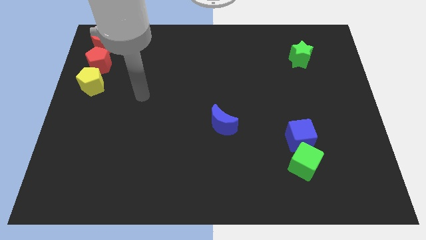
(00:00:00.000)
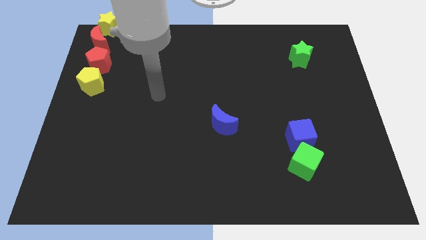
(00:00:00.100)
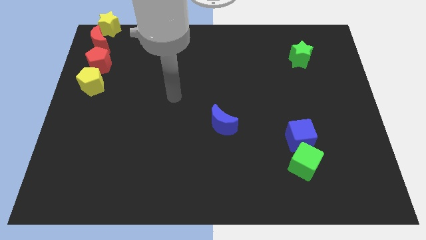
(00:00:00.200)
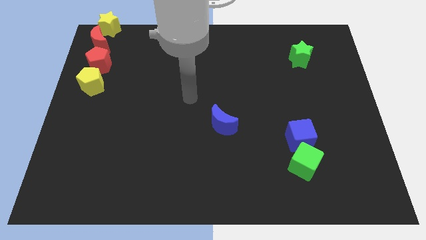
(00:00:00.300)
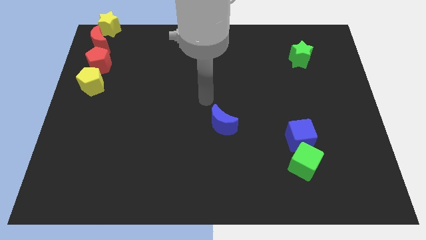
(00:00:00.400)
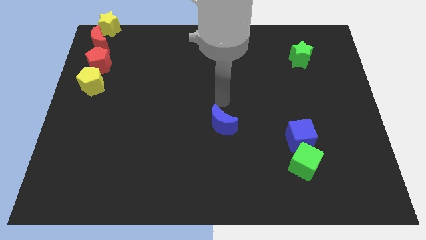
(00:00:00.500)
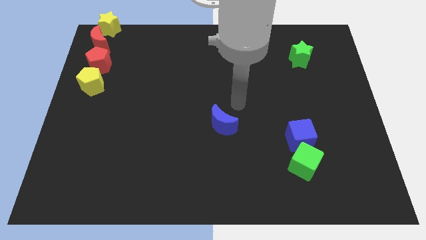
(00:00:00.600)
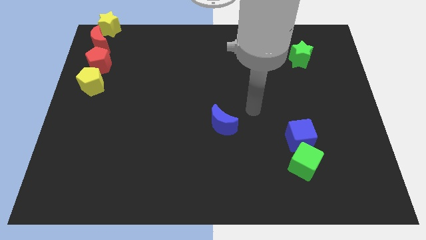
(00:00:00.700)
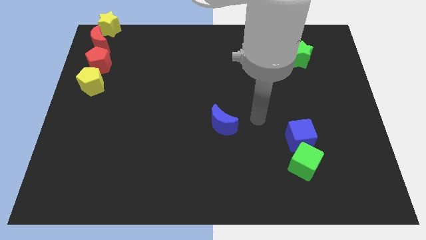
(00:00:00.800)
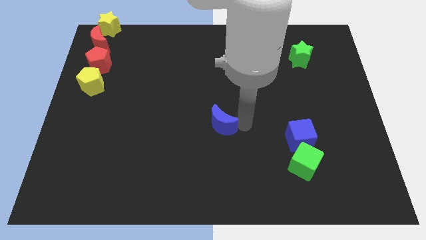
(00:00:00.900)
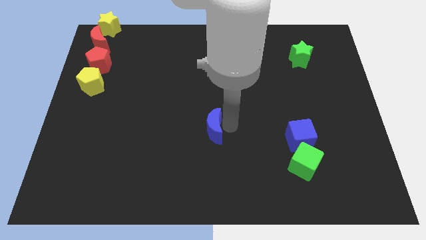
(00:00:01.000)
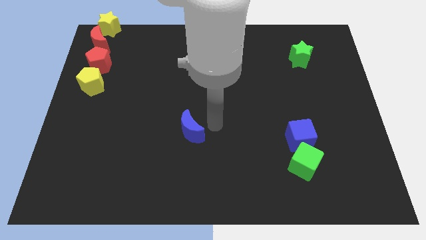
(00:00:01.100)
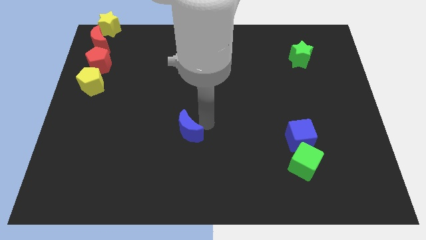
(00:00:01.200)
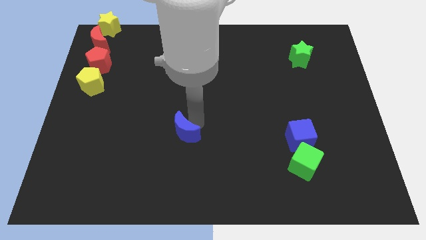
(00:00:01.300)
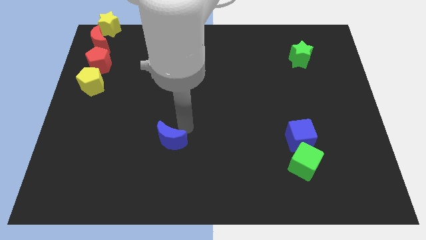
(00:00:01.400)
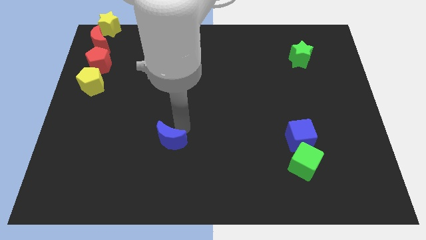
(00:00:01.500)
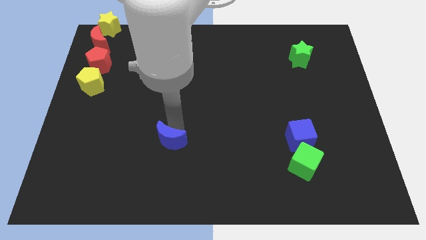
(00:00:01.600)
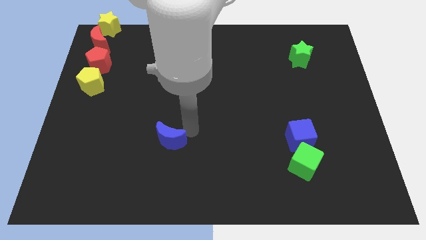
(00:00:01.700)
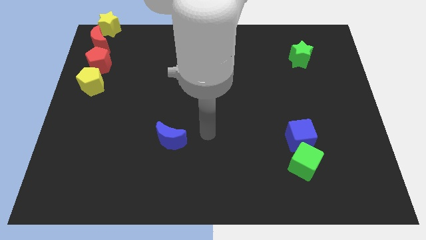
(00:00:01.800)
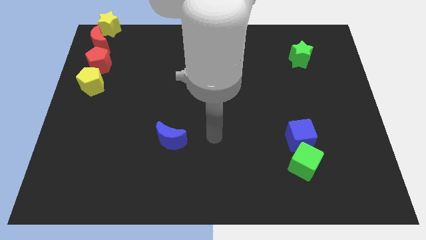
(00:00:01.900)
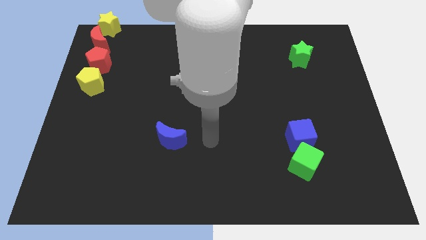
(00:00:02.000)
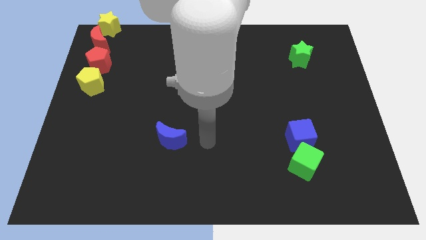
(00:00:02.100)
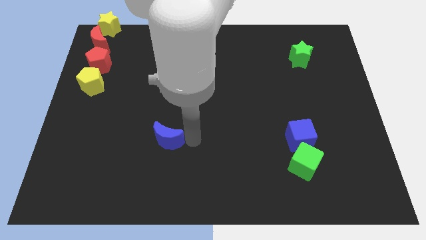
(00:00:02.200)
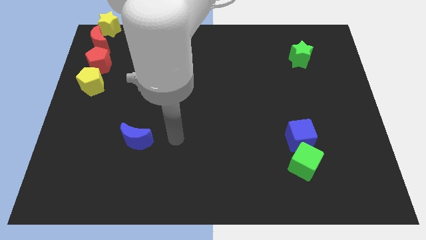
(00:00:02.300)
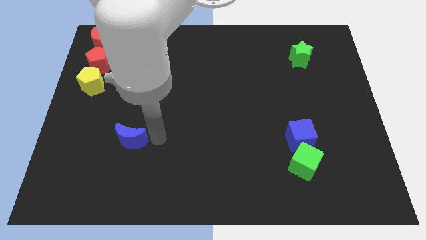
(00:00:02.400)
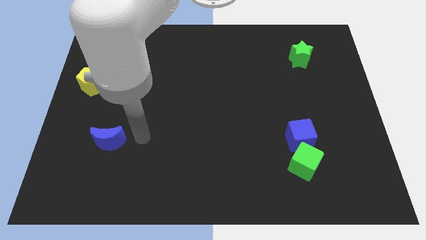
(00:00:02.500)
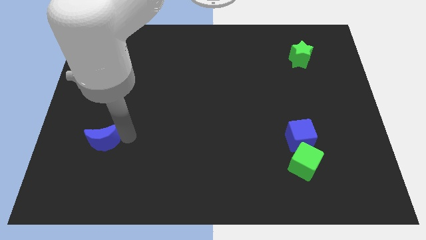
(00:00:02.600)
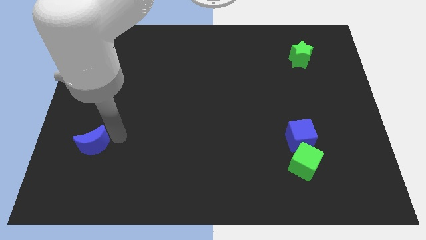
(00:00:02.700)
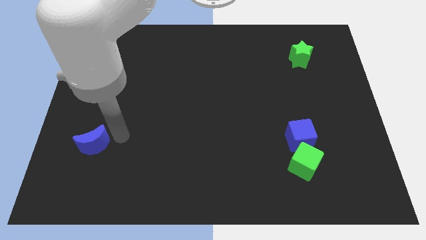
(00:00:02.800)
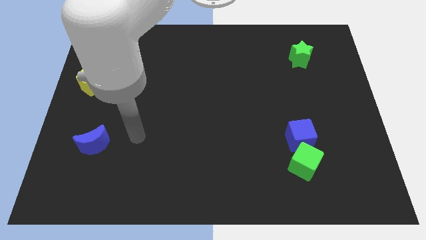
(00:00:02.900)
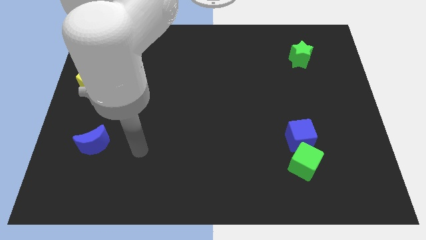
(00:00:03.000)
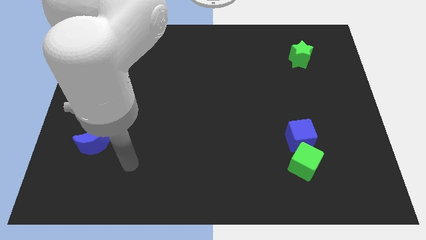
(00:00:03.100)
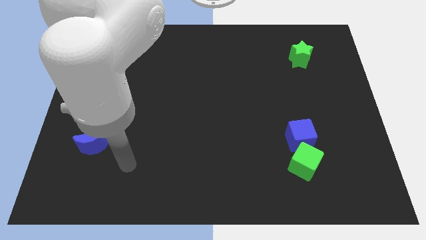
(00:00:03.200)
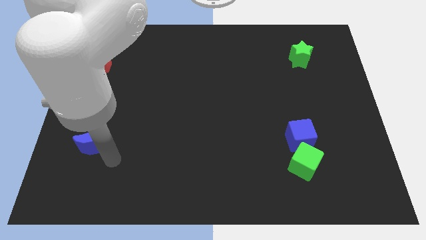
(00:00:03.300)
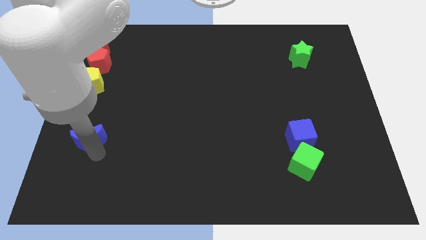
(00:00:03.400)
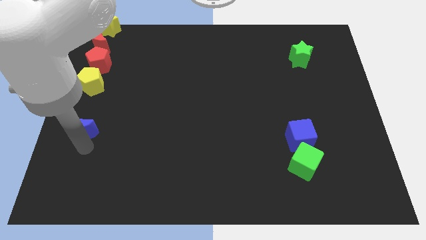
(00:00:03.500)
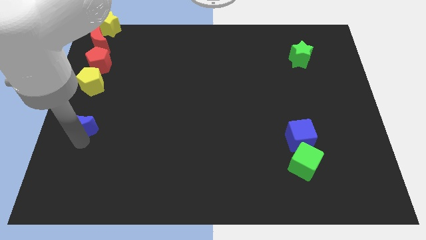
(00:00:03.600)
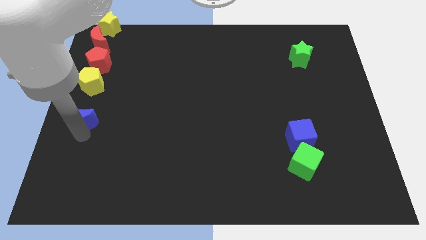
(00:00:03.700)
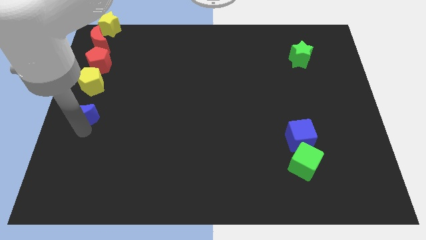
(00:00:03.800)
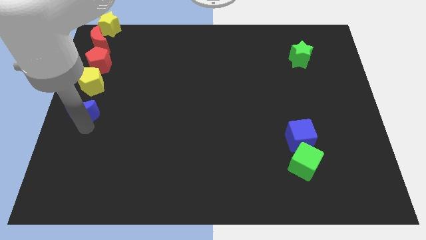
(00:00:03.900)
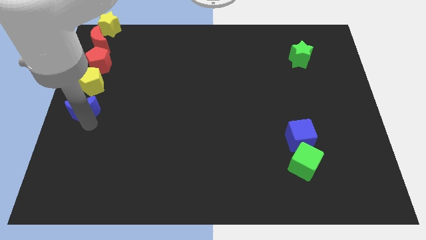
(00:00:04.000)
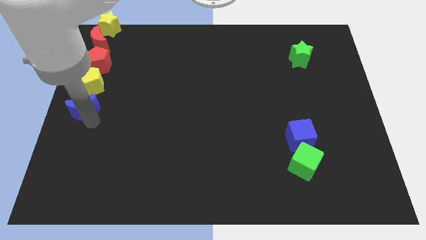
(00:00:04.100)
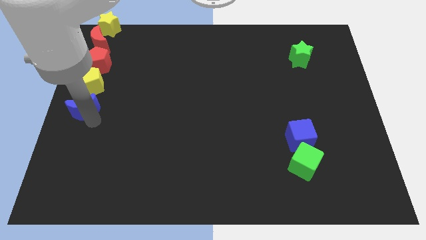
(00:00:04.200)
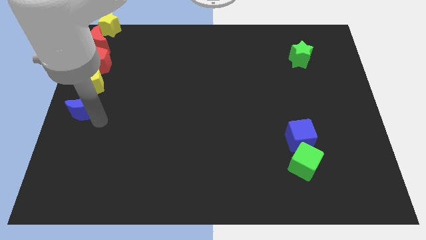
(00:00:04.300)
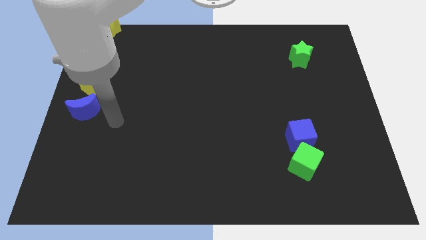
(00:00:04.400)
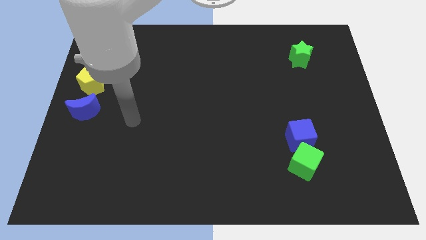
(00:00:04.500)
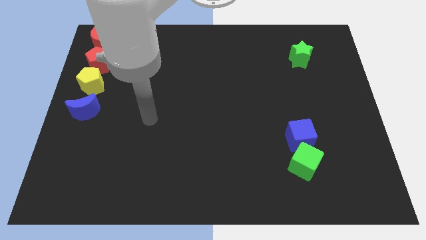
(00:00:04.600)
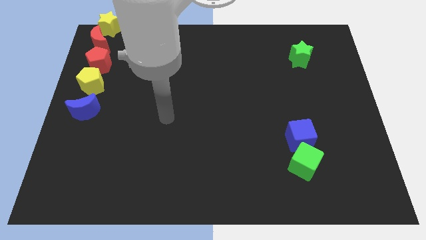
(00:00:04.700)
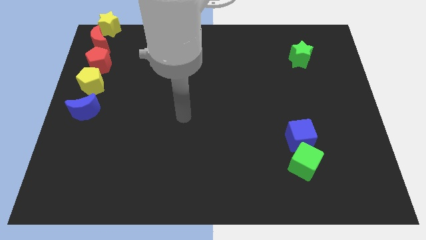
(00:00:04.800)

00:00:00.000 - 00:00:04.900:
put the blue crescent below the yellow pentagon

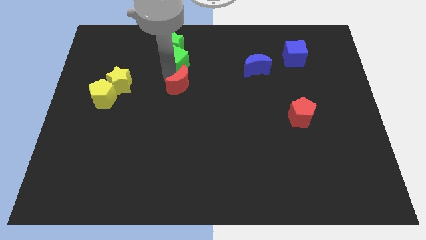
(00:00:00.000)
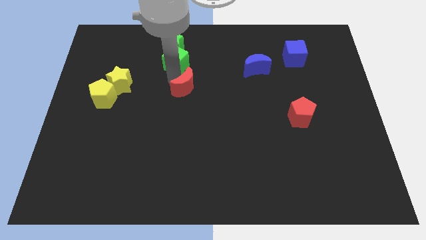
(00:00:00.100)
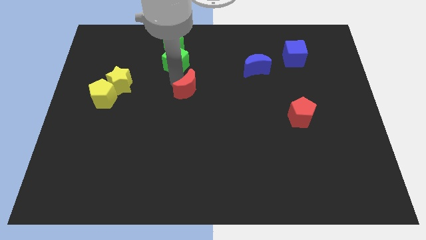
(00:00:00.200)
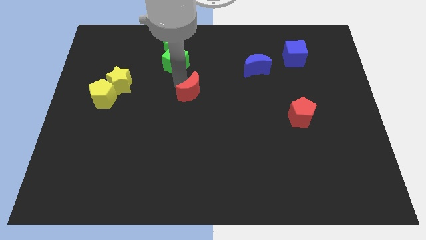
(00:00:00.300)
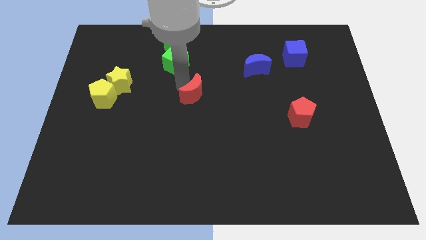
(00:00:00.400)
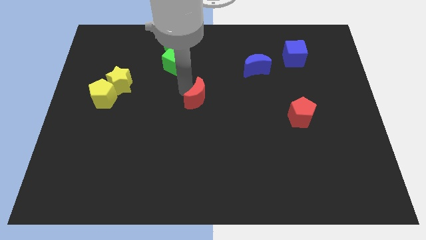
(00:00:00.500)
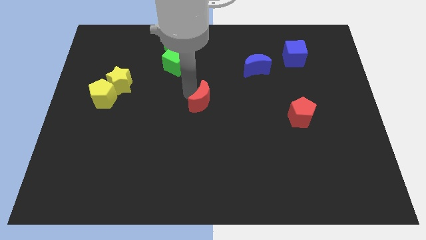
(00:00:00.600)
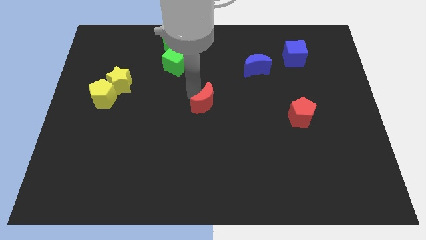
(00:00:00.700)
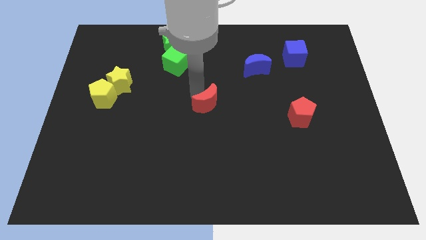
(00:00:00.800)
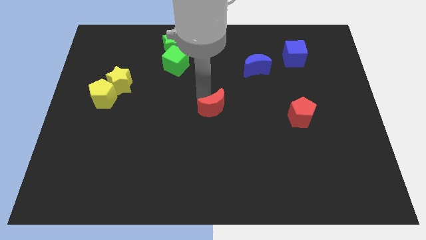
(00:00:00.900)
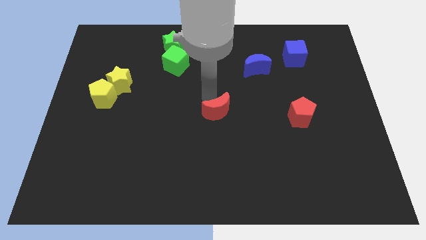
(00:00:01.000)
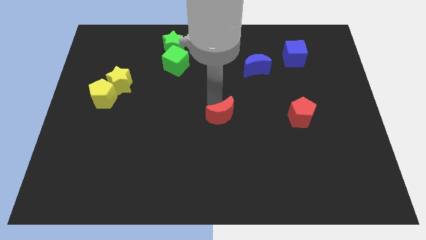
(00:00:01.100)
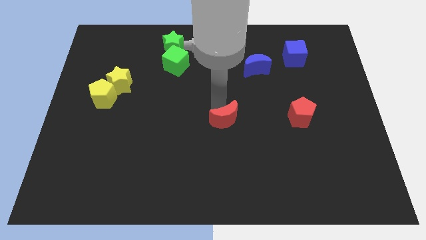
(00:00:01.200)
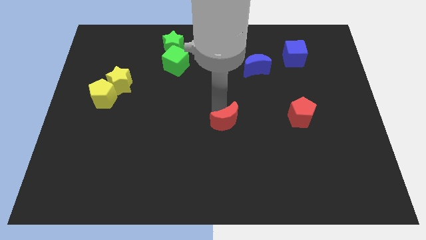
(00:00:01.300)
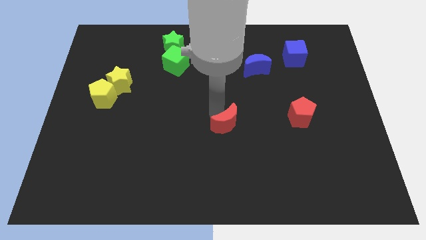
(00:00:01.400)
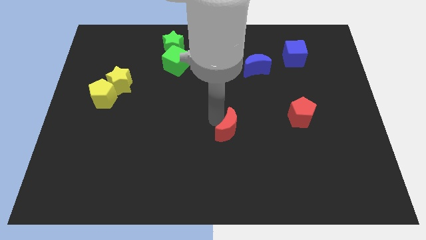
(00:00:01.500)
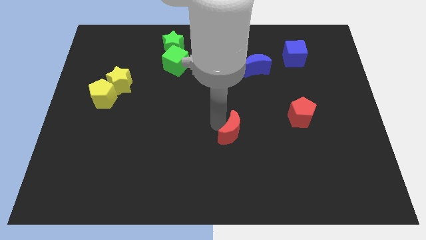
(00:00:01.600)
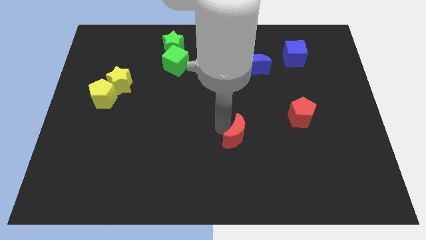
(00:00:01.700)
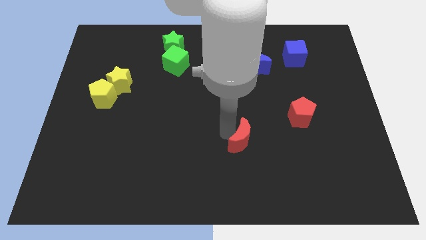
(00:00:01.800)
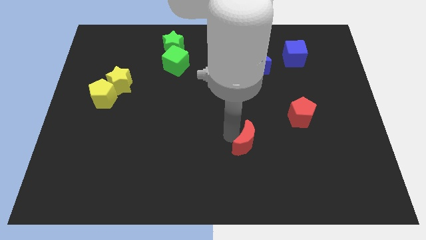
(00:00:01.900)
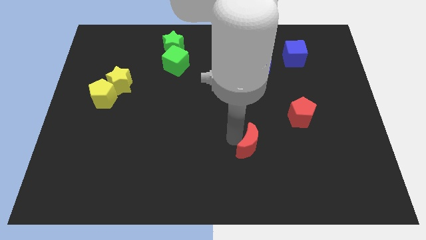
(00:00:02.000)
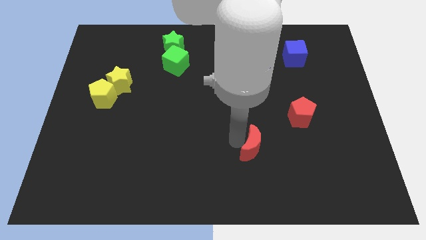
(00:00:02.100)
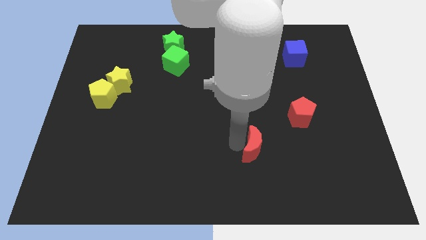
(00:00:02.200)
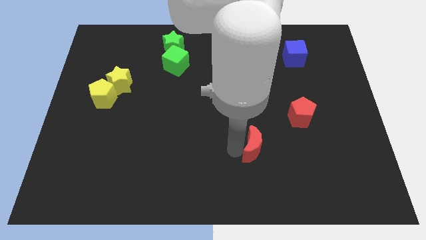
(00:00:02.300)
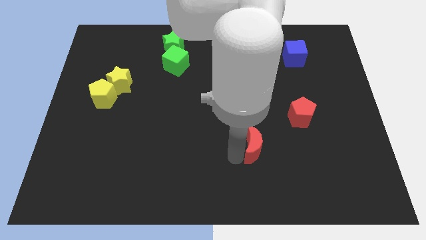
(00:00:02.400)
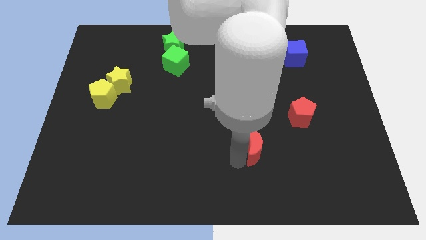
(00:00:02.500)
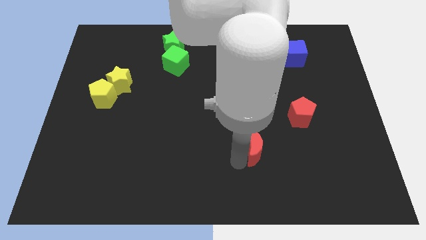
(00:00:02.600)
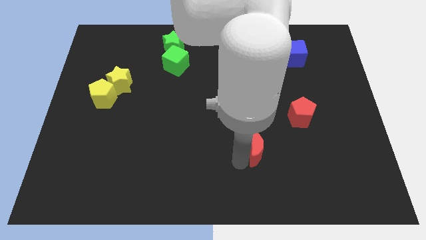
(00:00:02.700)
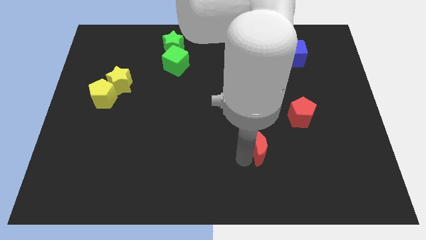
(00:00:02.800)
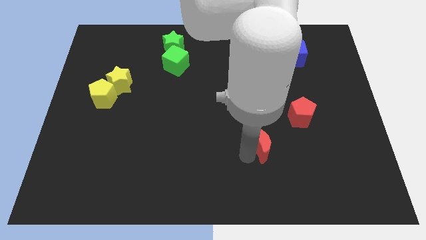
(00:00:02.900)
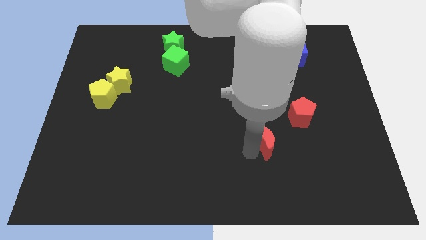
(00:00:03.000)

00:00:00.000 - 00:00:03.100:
move the red crescent towards the red pentagon

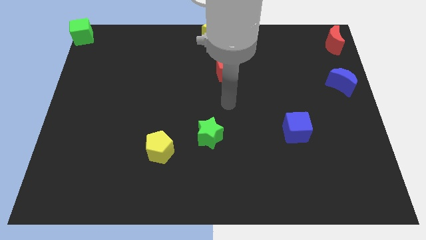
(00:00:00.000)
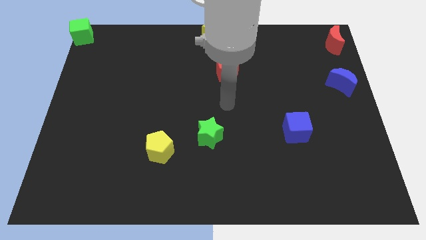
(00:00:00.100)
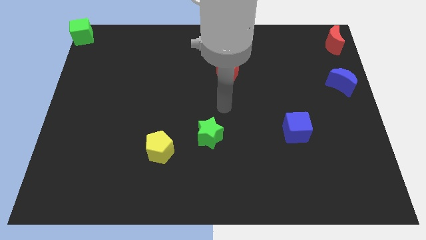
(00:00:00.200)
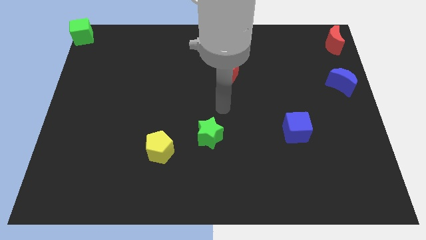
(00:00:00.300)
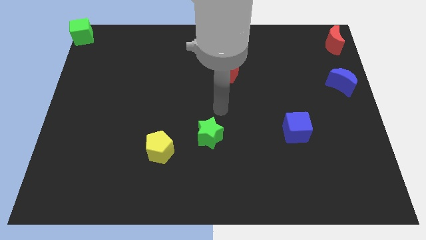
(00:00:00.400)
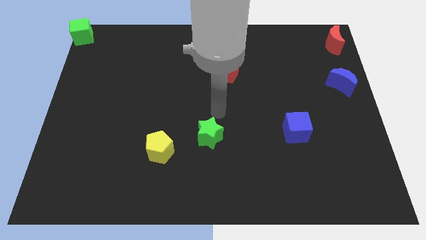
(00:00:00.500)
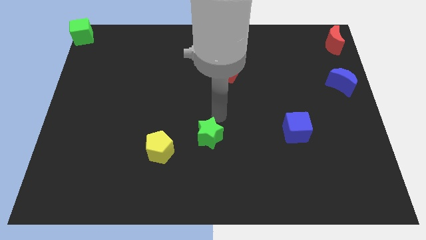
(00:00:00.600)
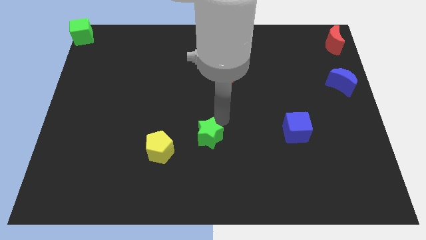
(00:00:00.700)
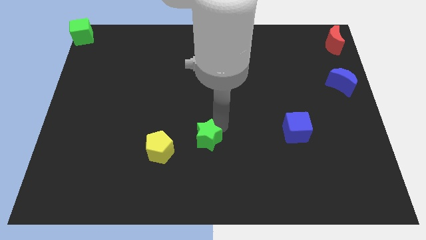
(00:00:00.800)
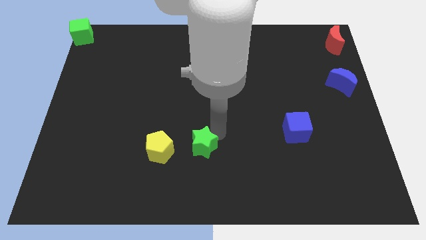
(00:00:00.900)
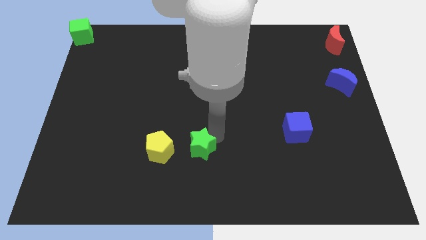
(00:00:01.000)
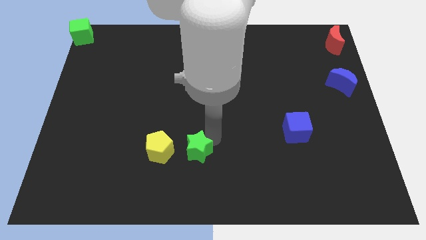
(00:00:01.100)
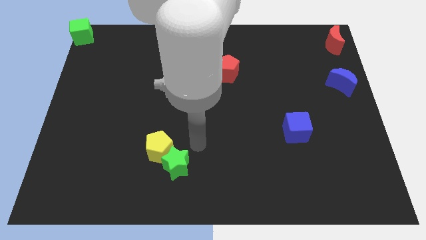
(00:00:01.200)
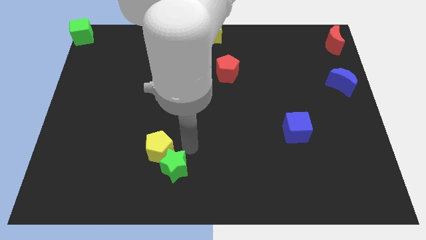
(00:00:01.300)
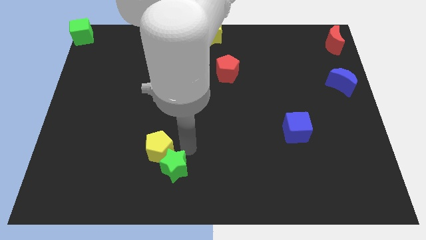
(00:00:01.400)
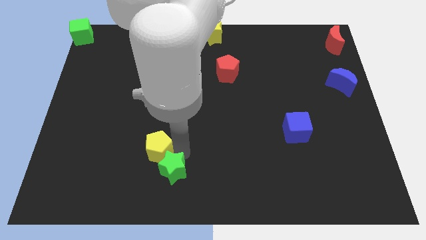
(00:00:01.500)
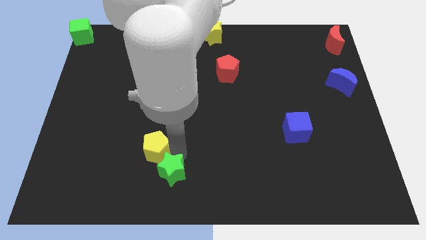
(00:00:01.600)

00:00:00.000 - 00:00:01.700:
push green star into the yellow pentagon
